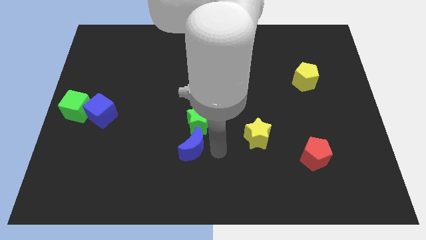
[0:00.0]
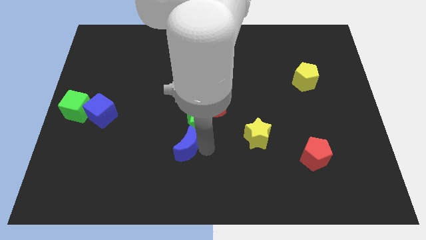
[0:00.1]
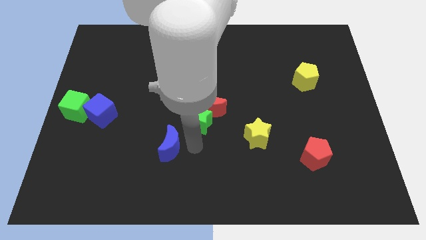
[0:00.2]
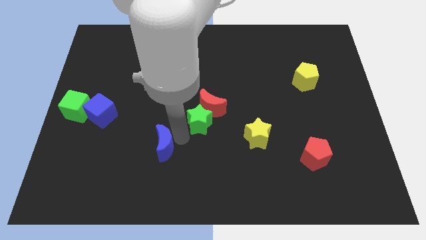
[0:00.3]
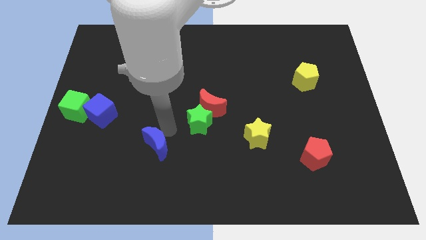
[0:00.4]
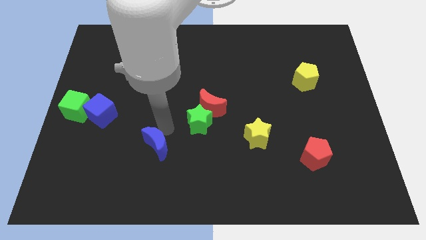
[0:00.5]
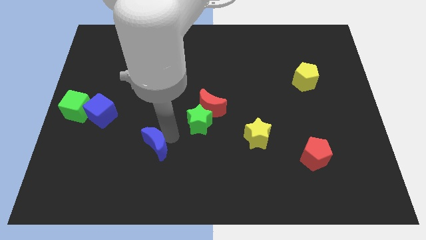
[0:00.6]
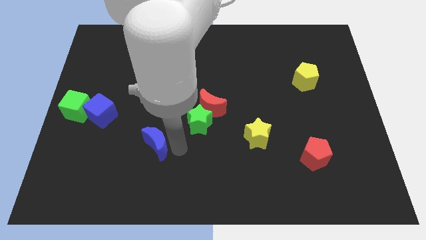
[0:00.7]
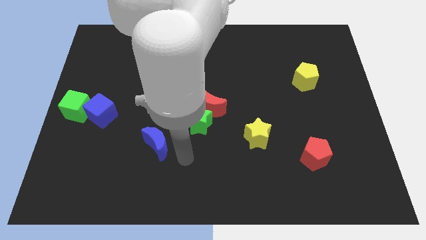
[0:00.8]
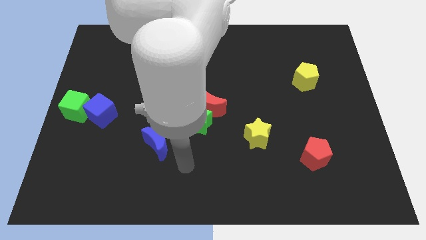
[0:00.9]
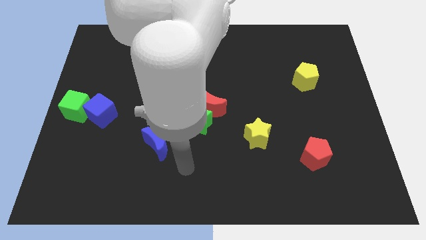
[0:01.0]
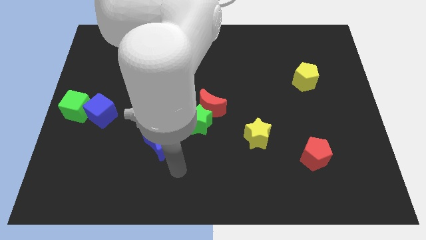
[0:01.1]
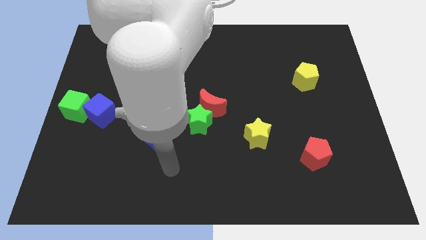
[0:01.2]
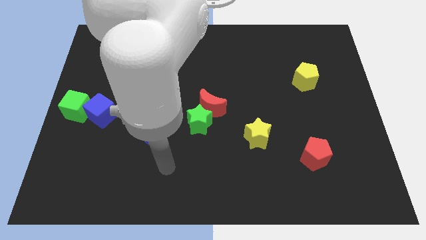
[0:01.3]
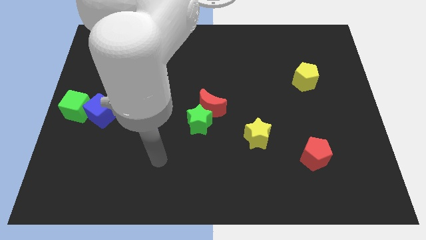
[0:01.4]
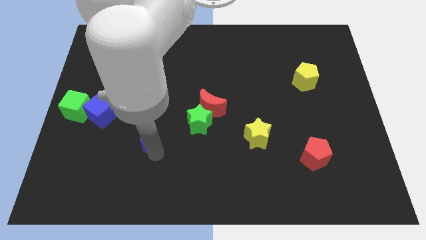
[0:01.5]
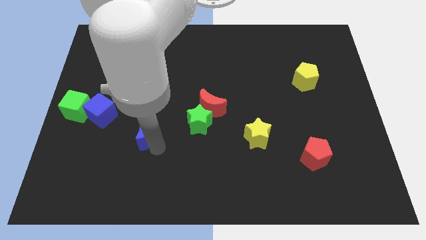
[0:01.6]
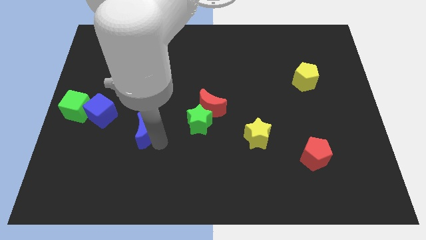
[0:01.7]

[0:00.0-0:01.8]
slide the blue crescent towards the blue cube

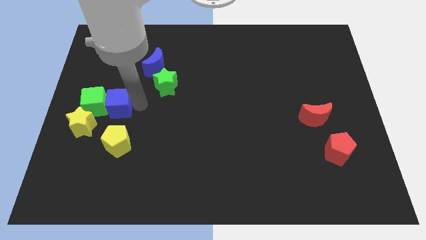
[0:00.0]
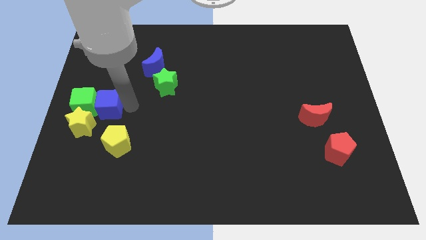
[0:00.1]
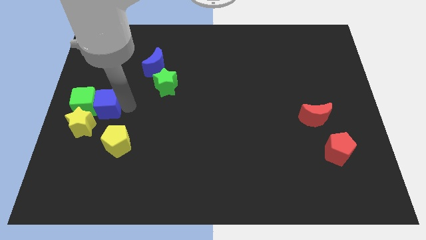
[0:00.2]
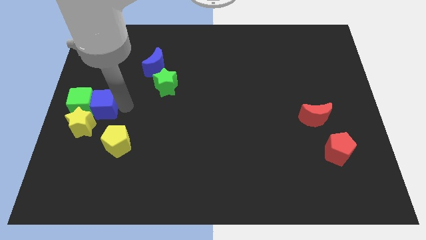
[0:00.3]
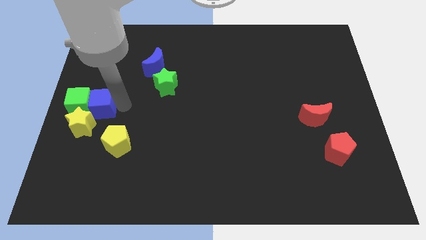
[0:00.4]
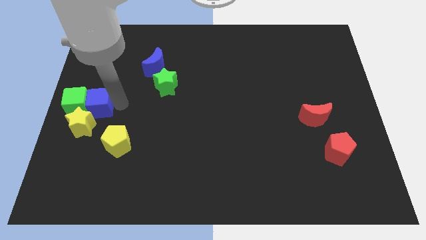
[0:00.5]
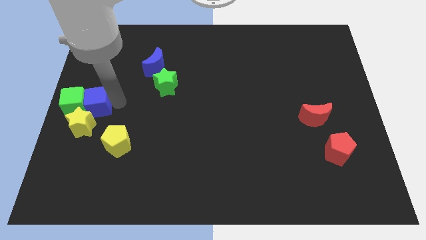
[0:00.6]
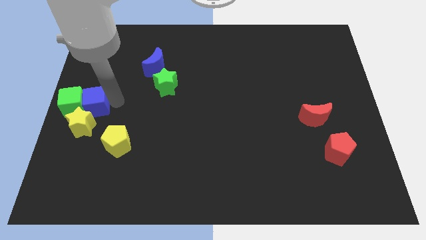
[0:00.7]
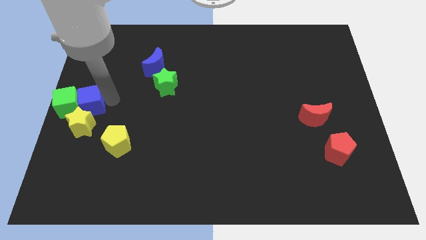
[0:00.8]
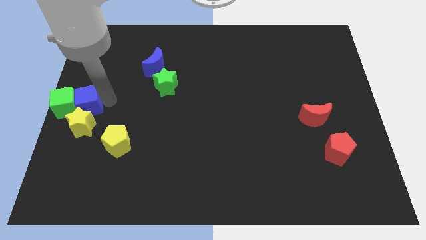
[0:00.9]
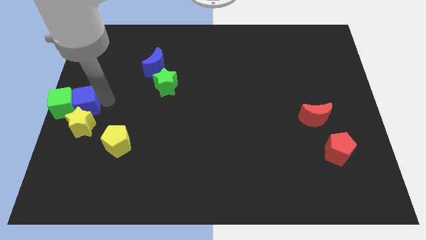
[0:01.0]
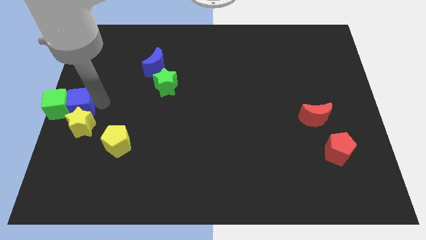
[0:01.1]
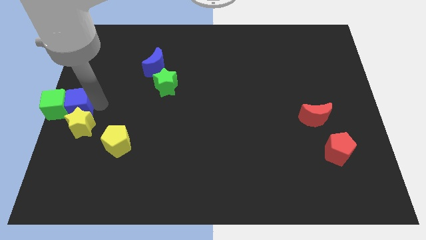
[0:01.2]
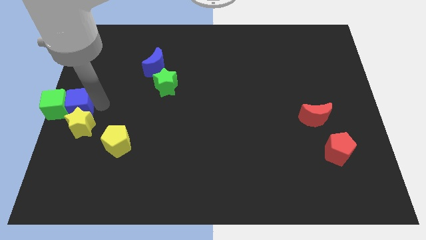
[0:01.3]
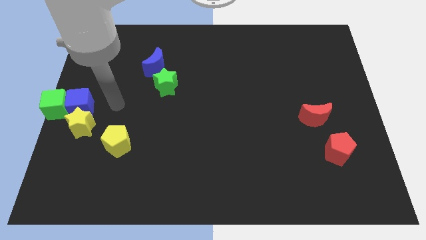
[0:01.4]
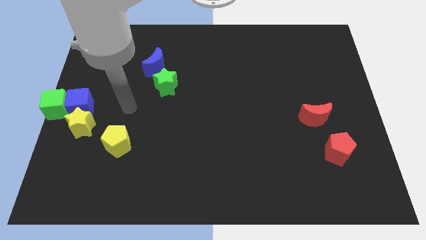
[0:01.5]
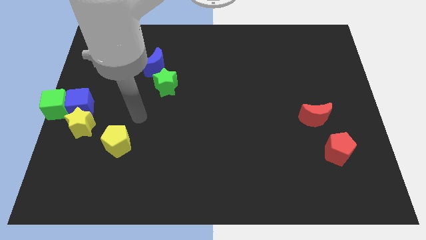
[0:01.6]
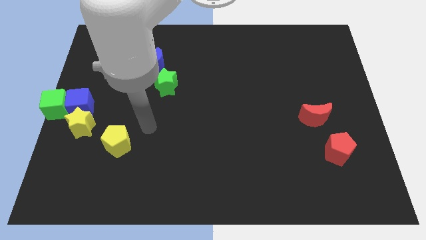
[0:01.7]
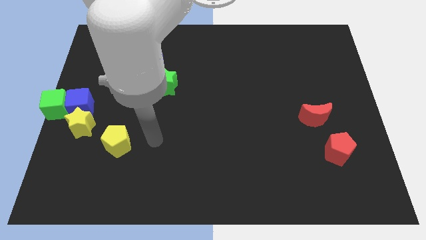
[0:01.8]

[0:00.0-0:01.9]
place blue cube to the top of yellow star

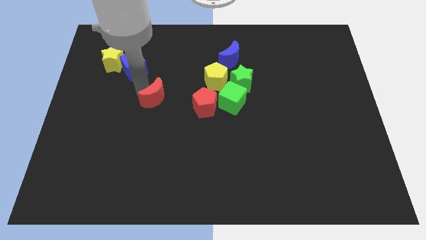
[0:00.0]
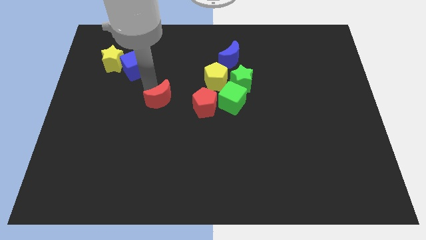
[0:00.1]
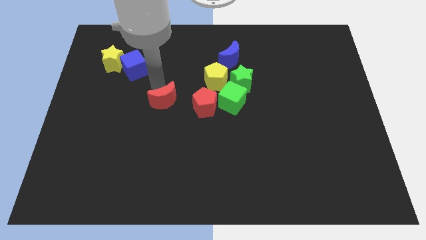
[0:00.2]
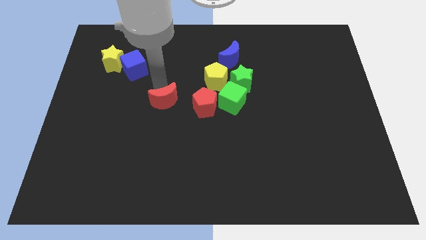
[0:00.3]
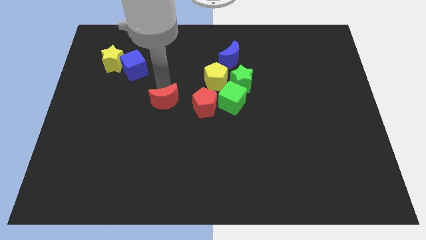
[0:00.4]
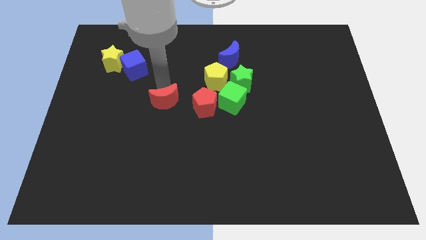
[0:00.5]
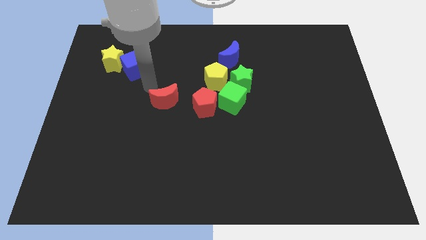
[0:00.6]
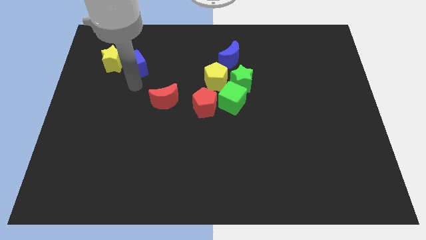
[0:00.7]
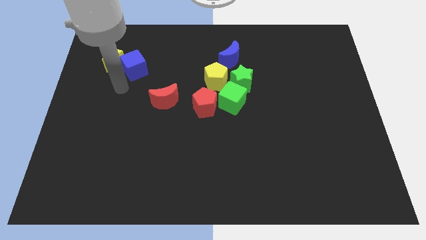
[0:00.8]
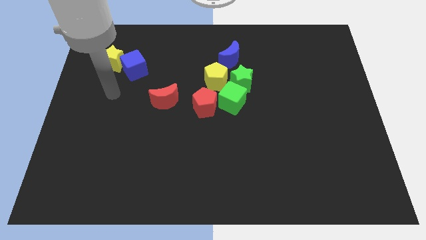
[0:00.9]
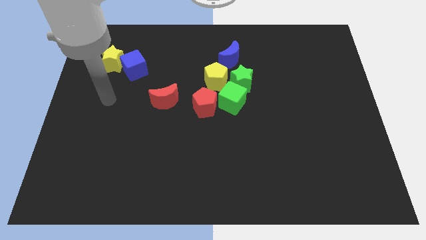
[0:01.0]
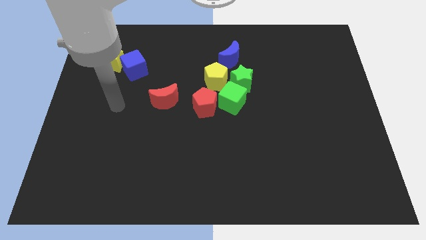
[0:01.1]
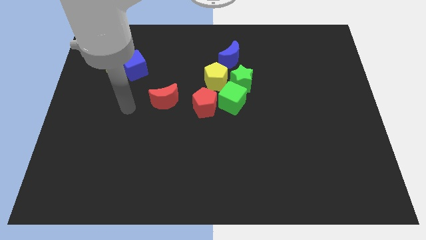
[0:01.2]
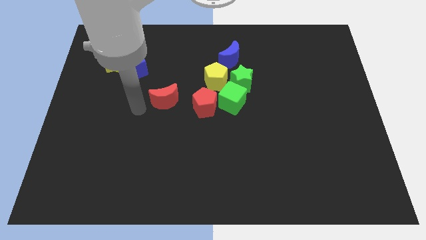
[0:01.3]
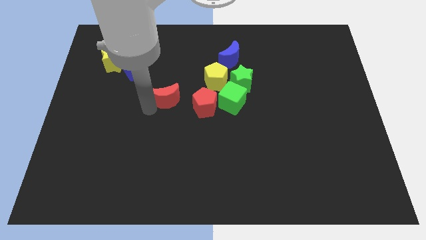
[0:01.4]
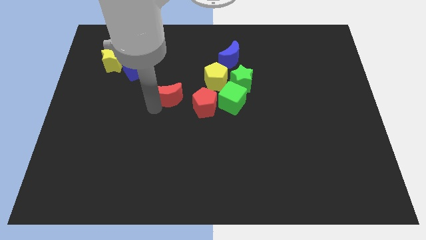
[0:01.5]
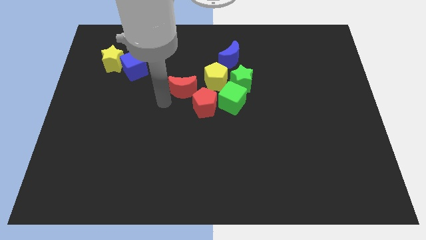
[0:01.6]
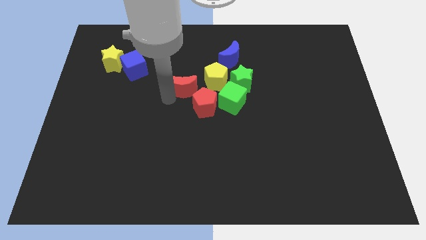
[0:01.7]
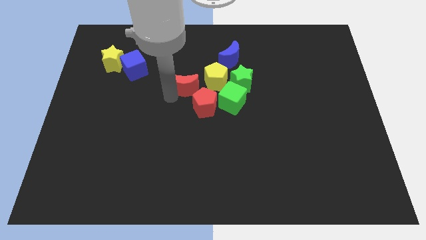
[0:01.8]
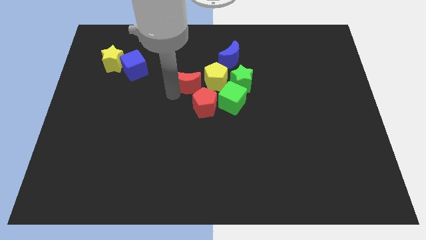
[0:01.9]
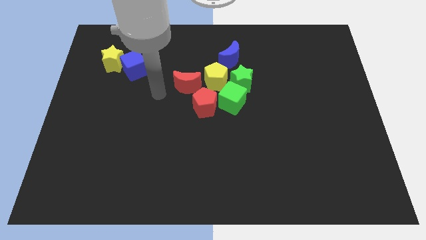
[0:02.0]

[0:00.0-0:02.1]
push the red crescent left to the yellow pentagon

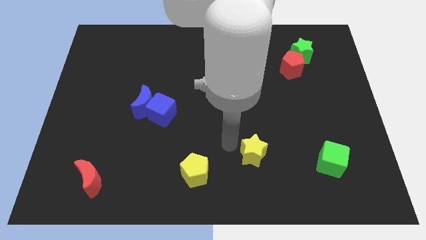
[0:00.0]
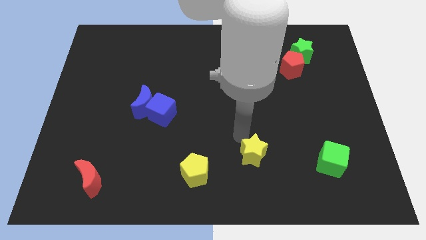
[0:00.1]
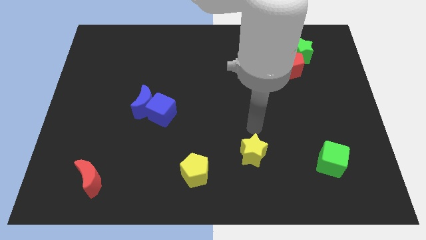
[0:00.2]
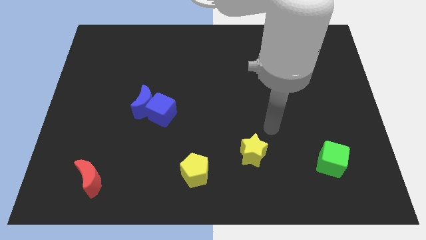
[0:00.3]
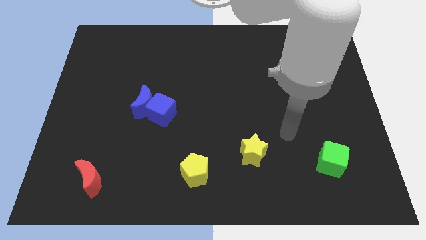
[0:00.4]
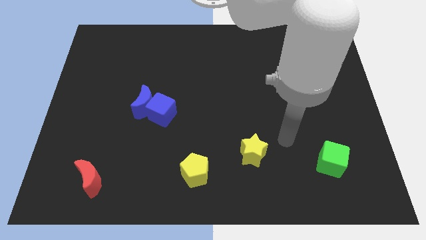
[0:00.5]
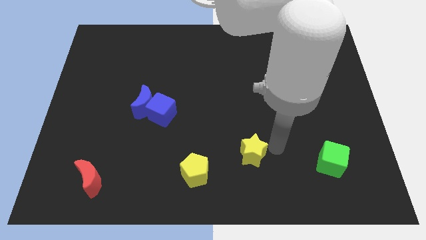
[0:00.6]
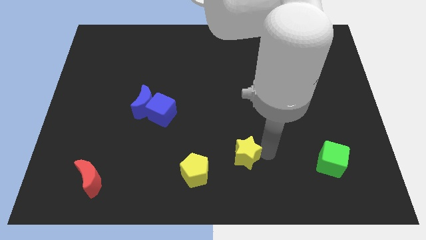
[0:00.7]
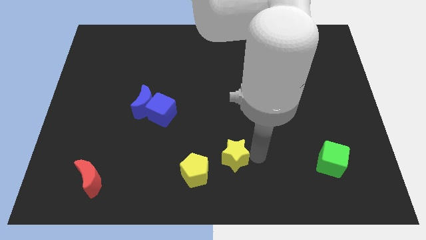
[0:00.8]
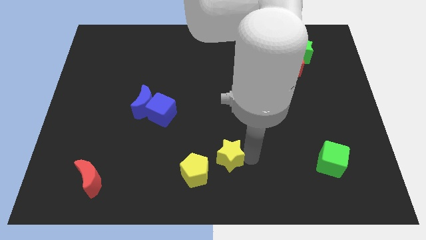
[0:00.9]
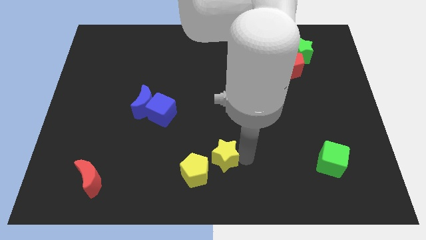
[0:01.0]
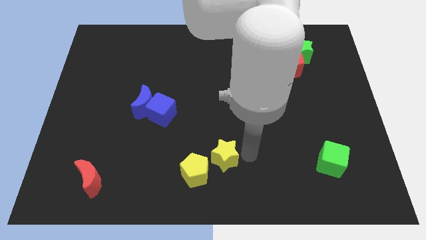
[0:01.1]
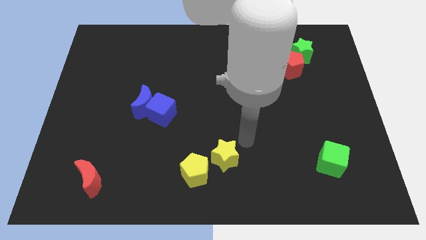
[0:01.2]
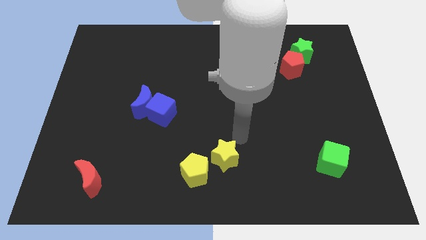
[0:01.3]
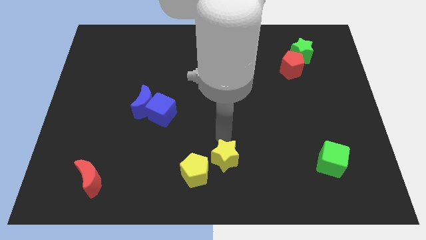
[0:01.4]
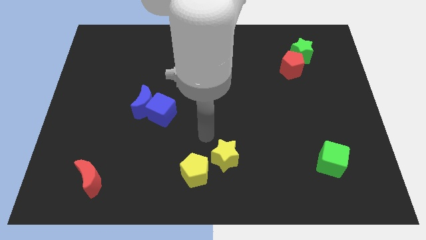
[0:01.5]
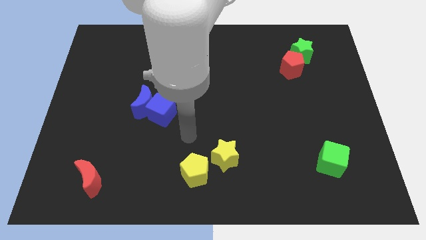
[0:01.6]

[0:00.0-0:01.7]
drag the yellow star towards the yellow pentagon

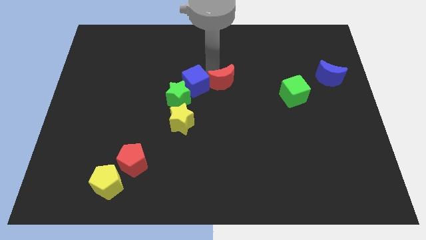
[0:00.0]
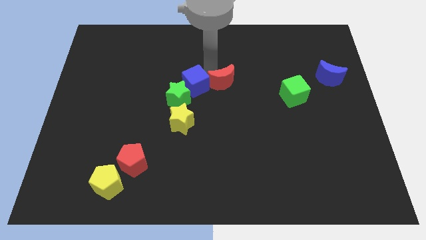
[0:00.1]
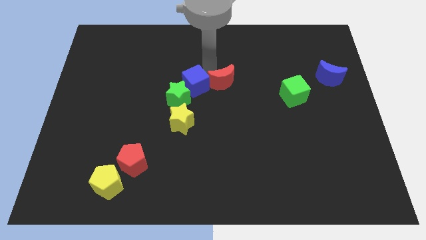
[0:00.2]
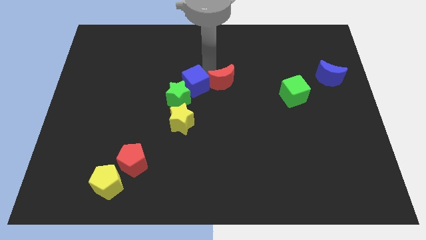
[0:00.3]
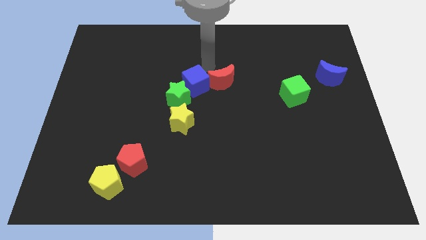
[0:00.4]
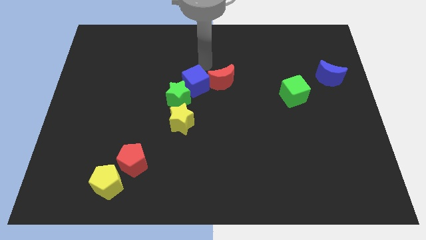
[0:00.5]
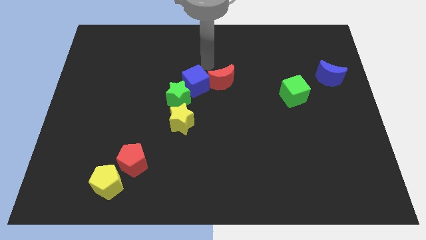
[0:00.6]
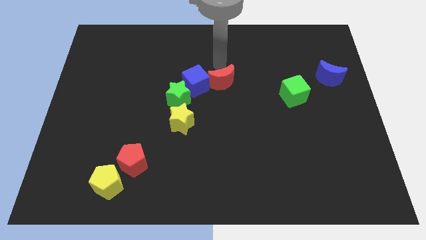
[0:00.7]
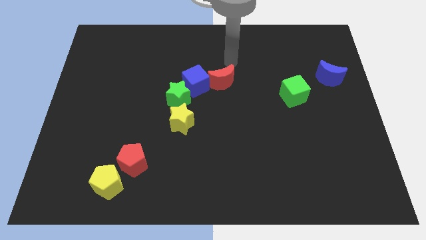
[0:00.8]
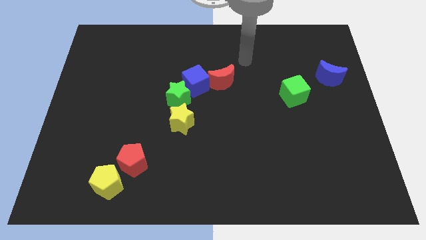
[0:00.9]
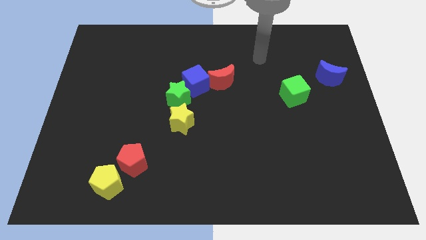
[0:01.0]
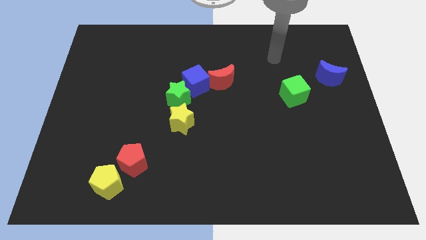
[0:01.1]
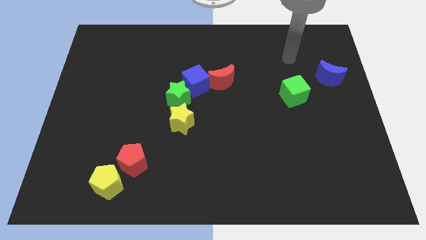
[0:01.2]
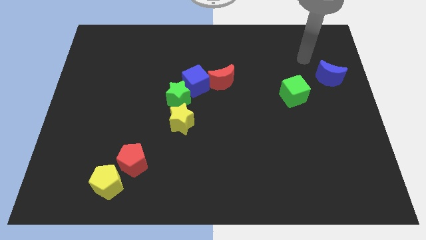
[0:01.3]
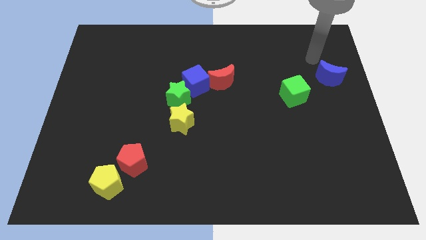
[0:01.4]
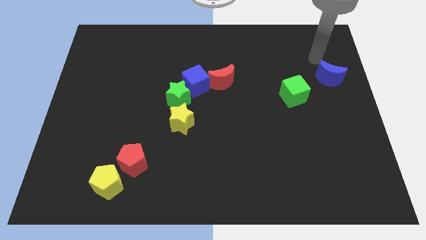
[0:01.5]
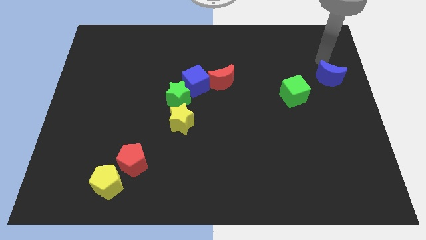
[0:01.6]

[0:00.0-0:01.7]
move your arm away from red moon
